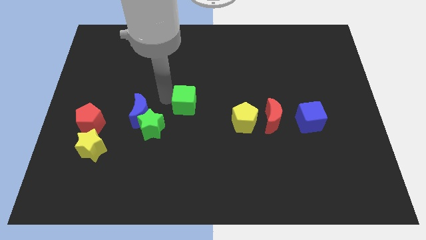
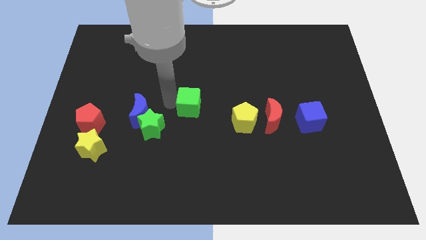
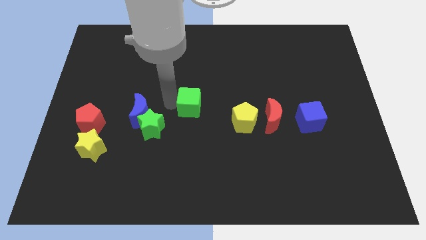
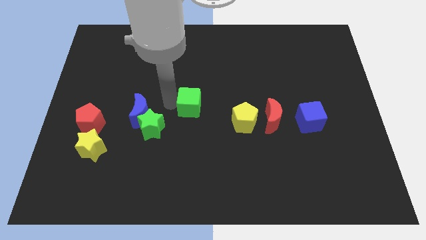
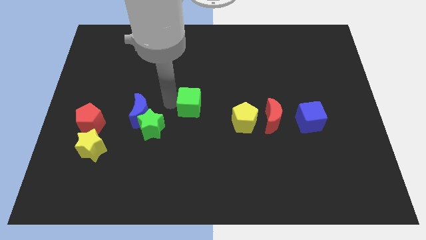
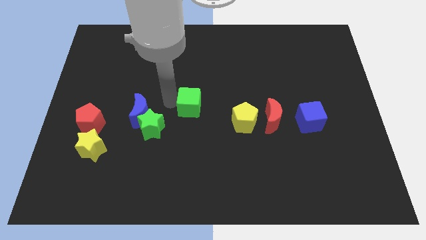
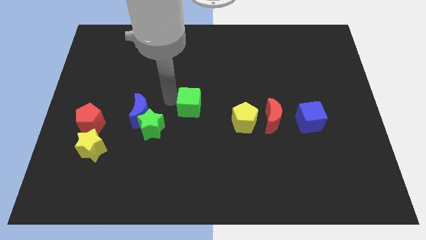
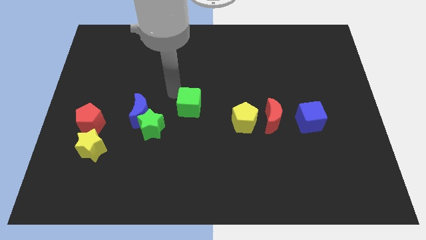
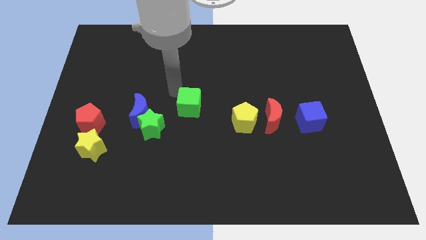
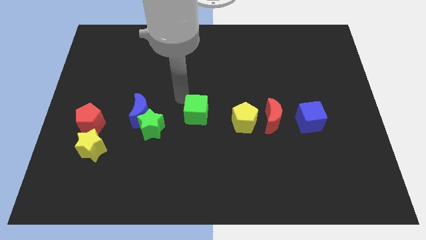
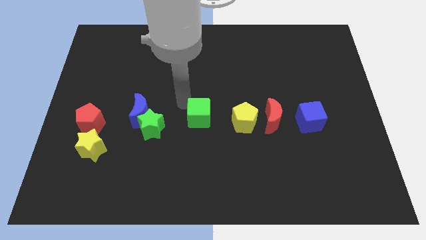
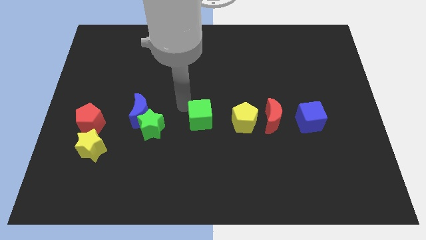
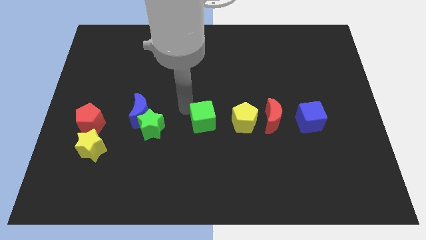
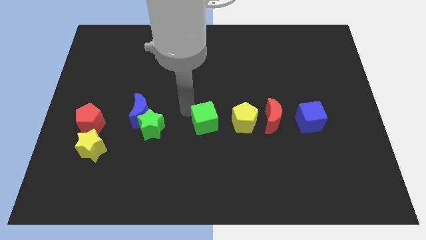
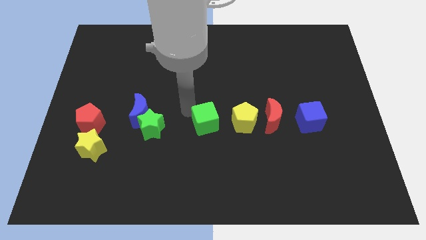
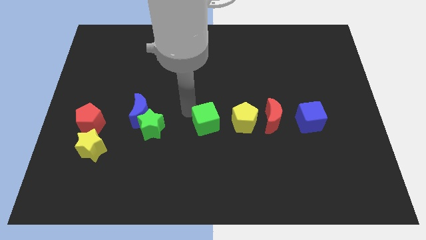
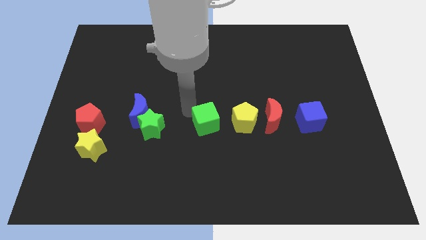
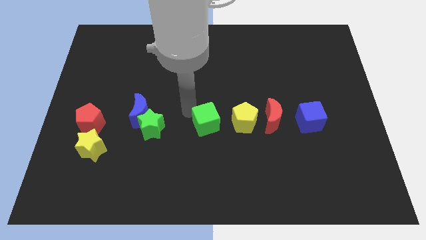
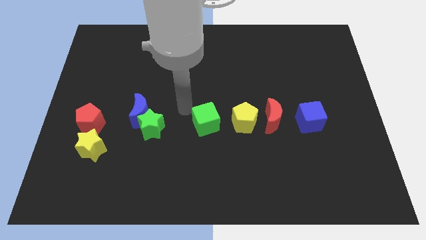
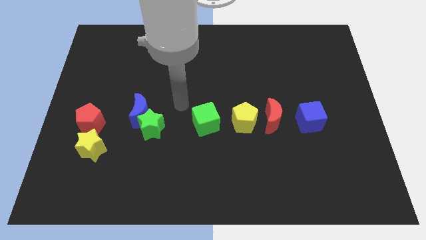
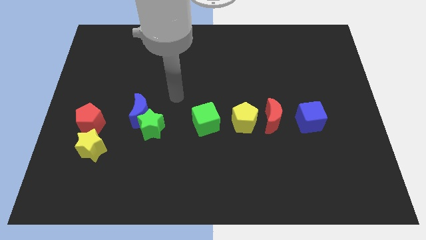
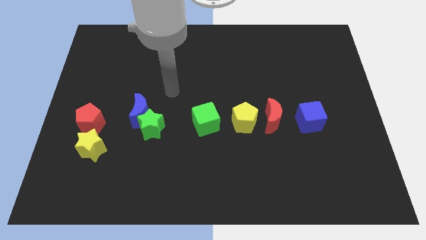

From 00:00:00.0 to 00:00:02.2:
push the green cube at the left side of the yellow pentagon

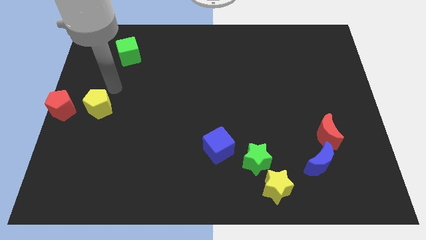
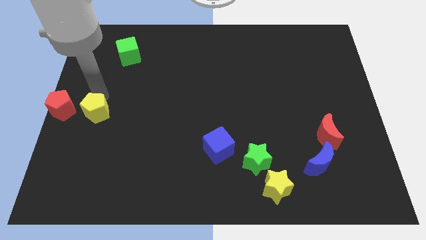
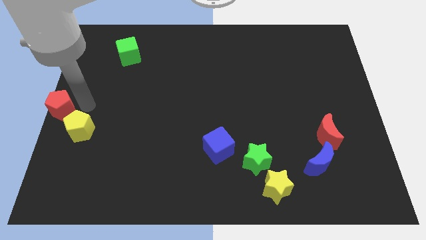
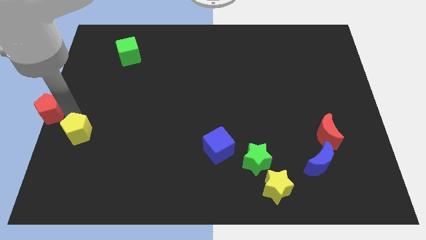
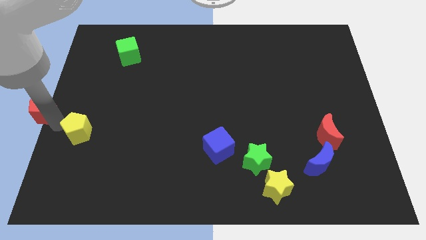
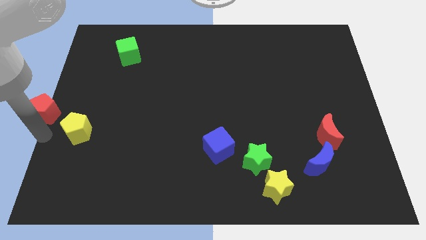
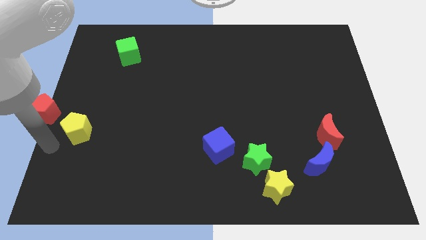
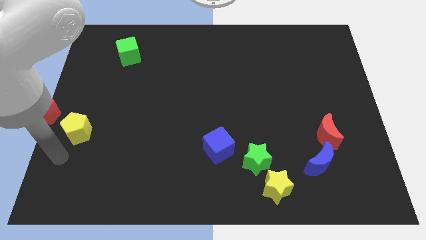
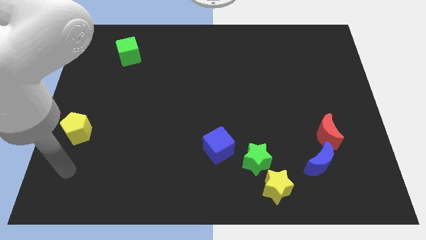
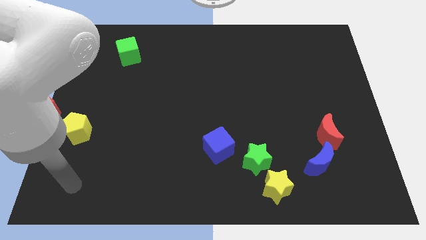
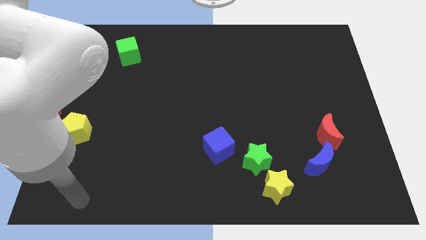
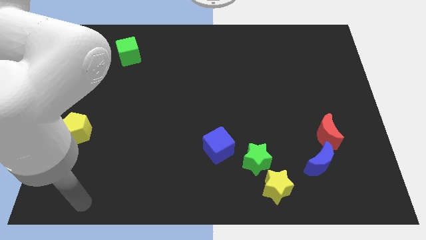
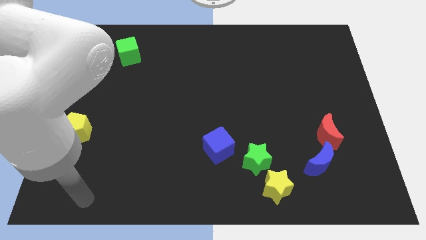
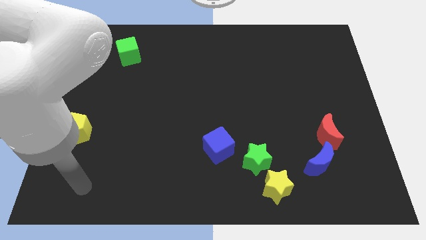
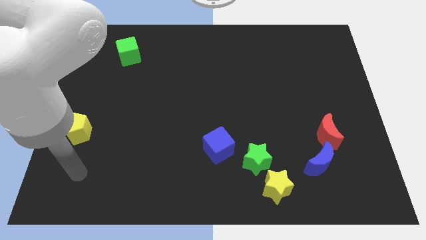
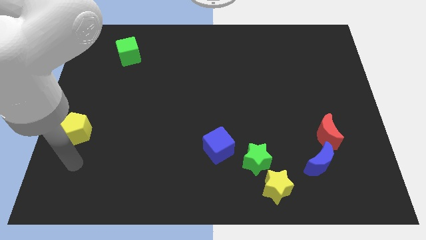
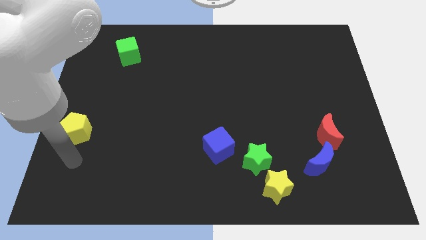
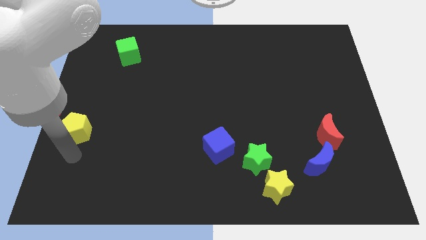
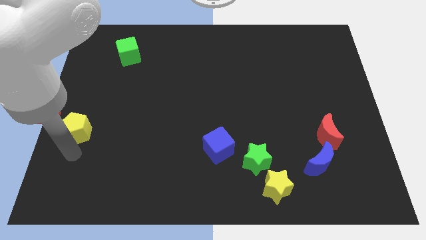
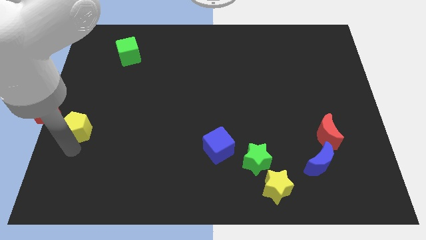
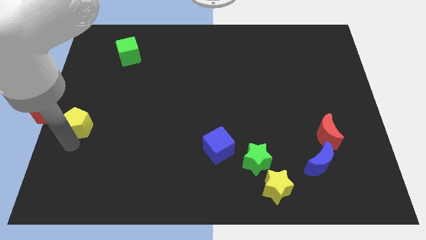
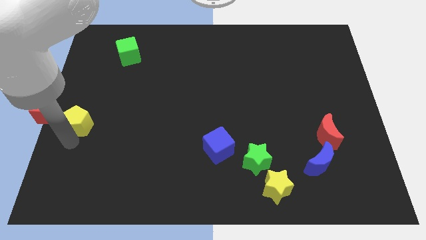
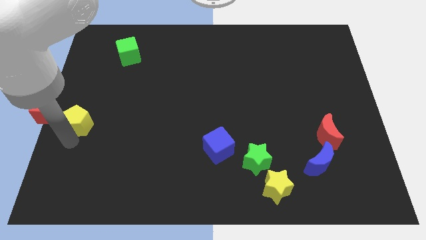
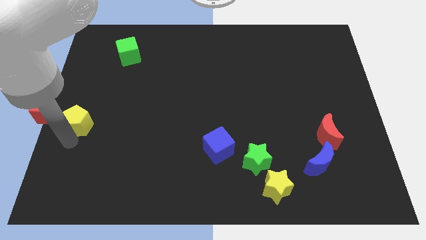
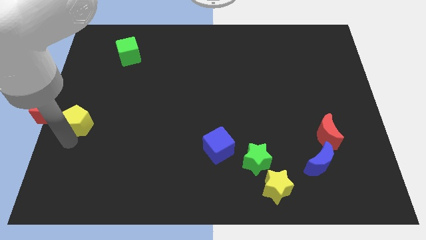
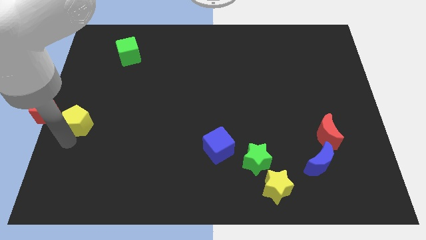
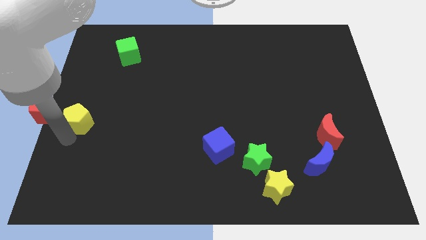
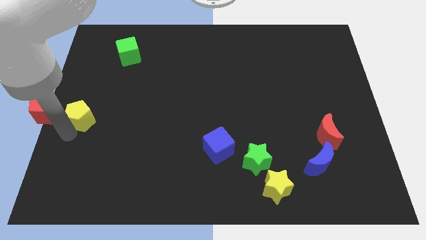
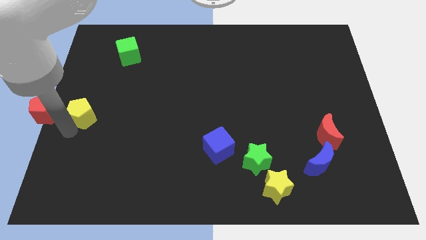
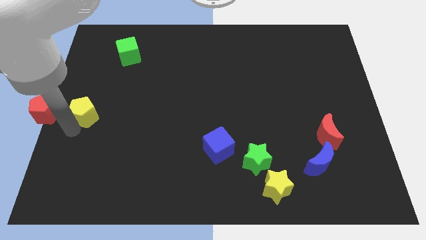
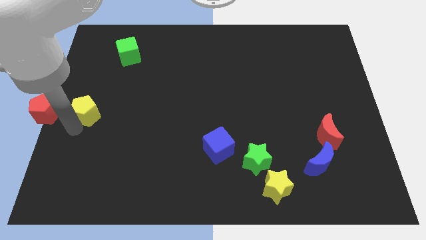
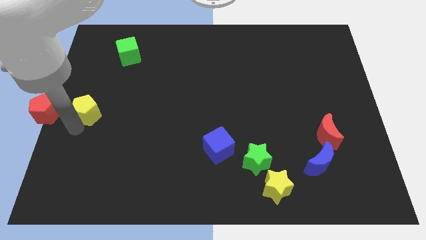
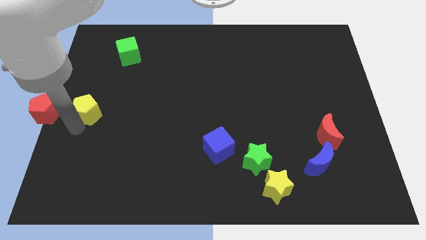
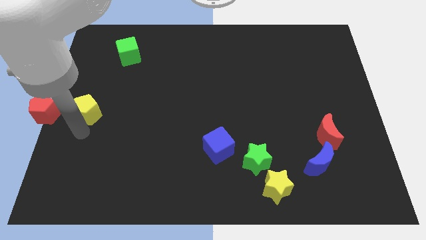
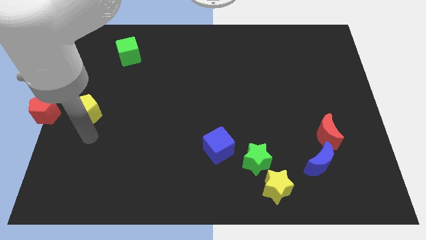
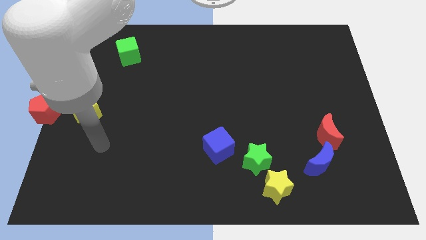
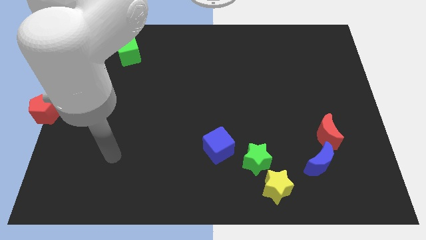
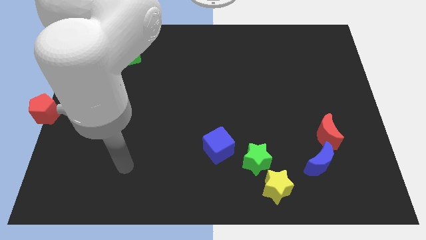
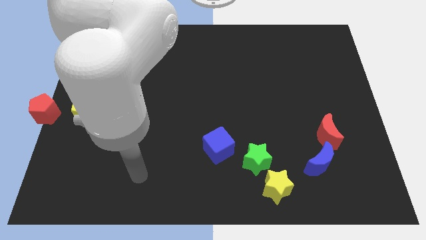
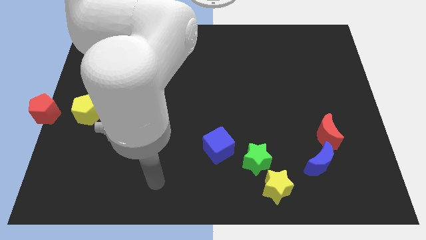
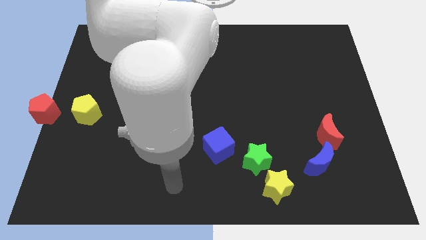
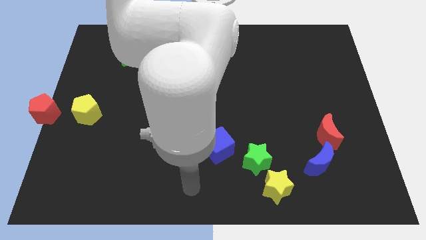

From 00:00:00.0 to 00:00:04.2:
push red and the yellow pentagon slightly to the left

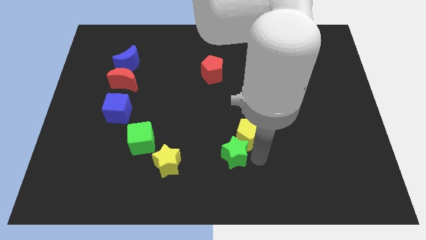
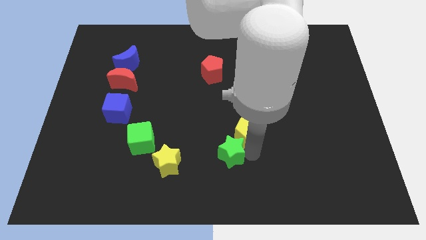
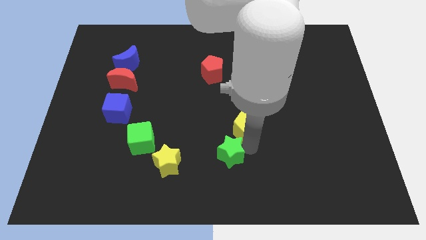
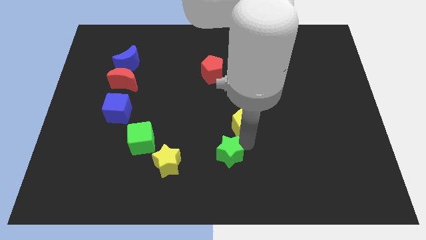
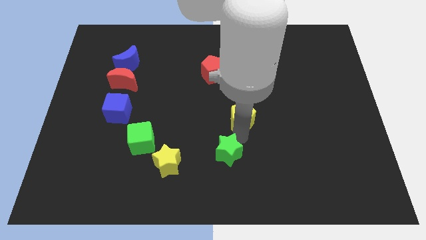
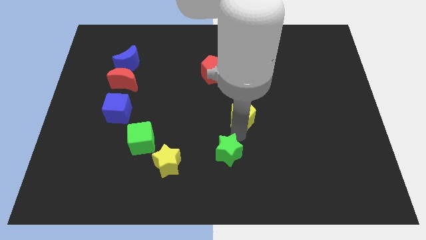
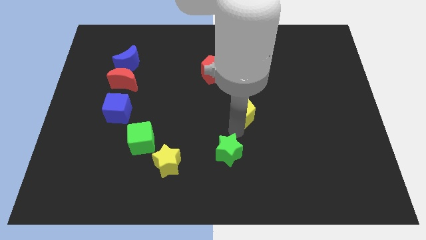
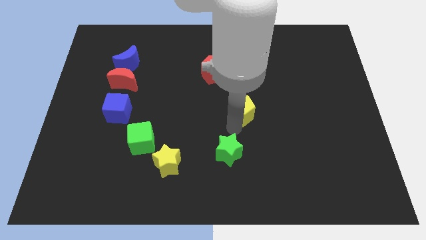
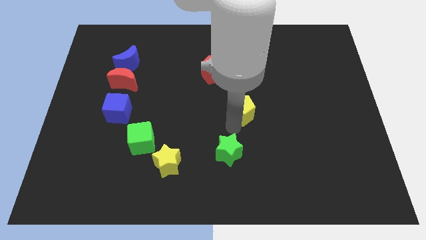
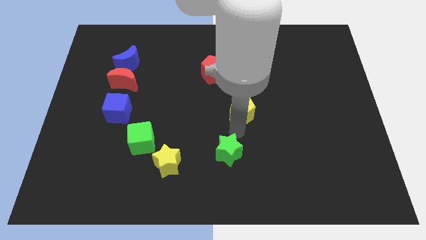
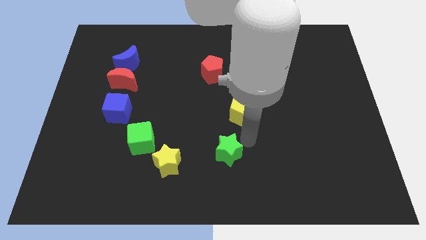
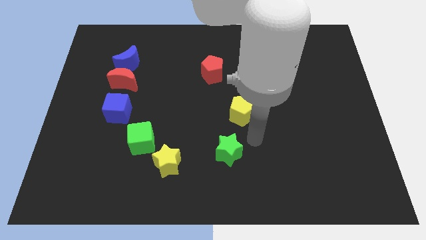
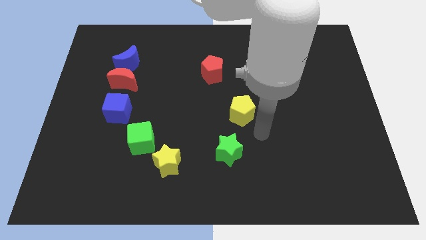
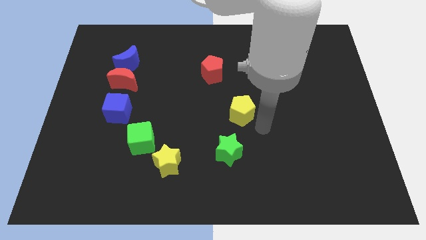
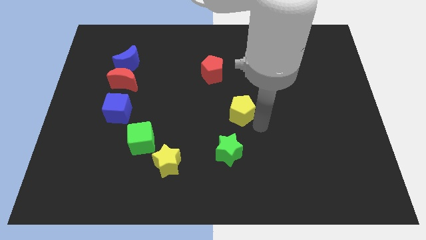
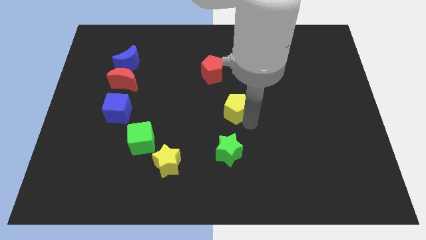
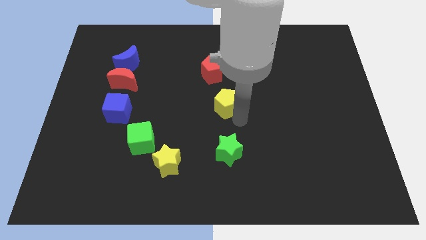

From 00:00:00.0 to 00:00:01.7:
move yellow pentagon towards the red pentagon

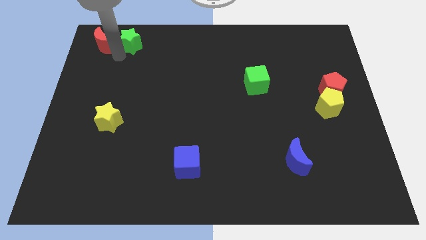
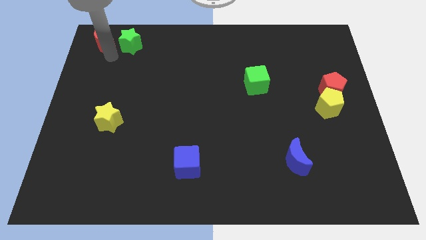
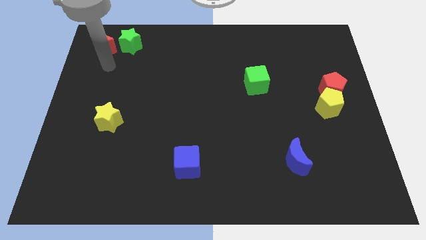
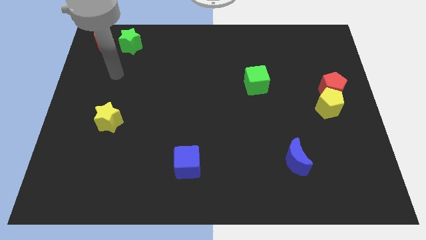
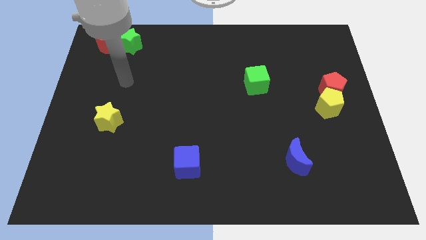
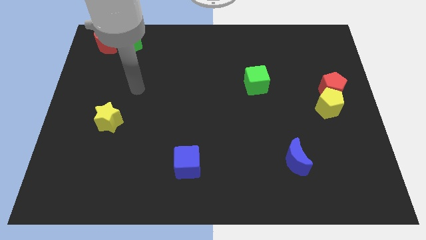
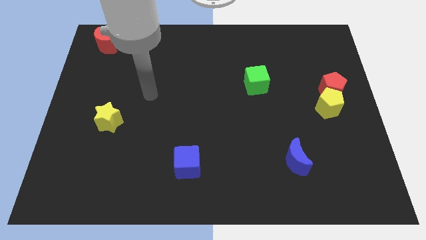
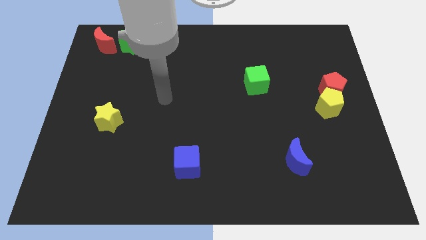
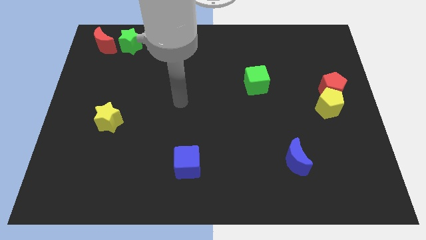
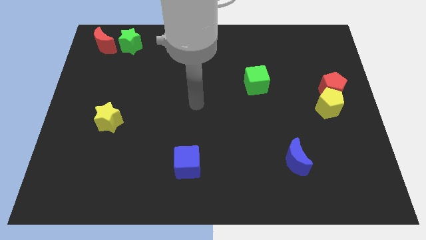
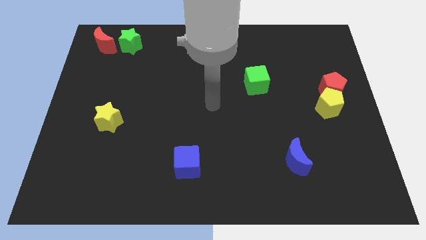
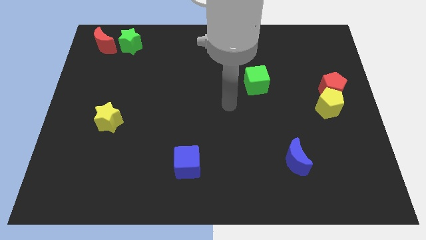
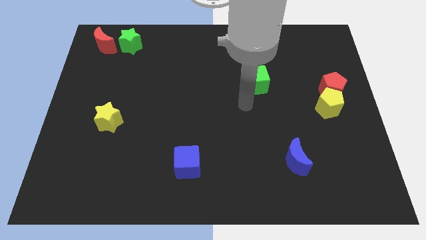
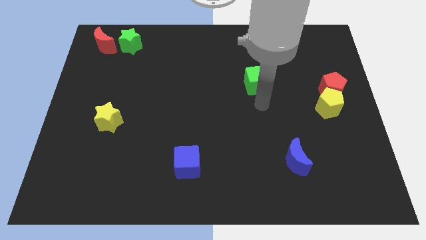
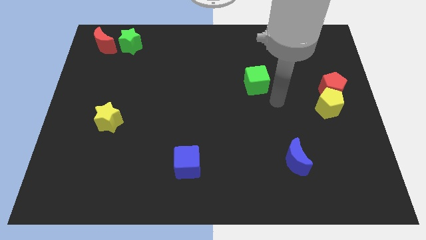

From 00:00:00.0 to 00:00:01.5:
point your arm towards the green cube
